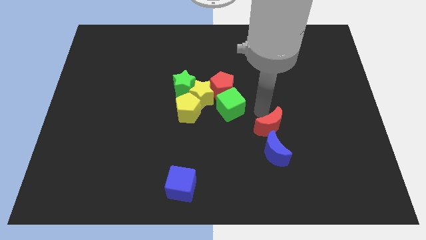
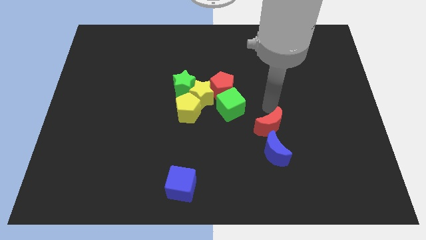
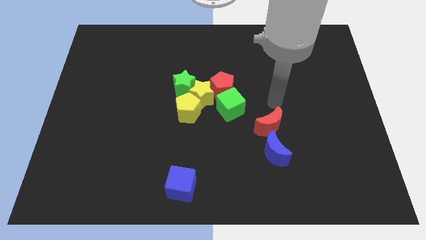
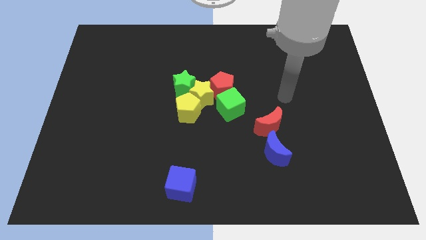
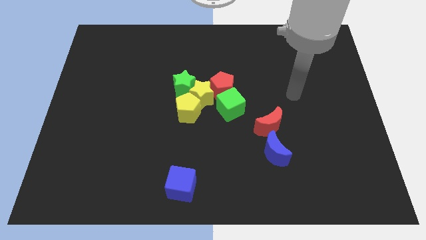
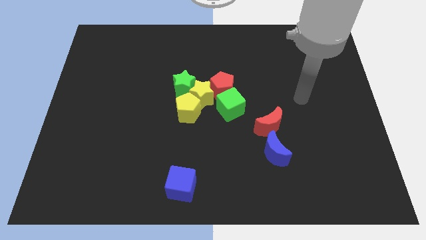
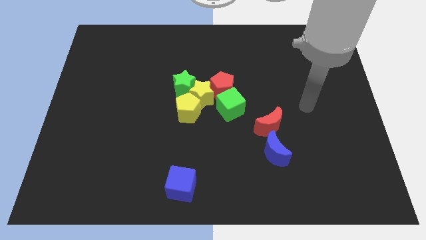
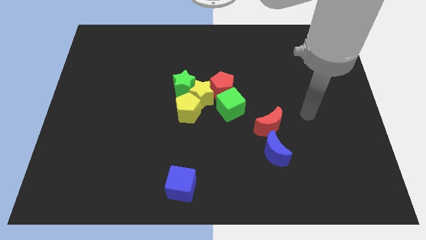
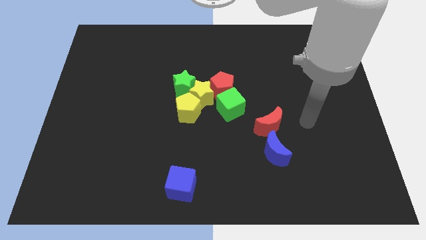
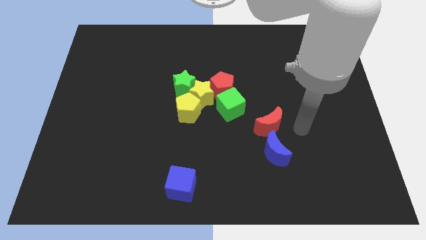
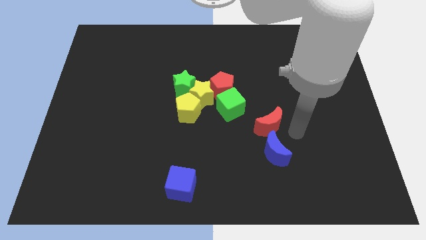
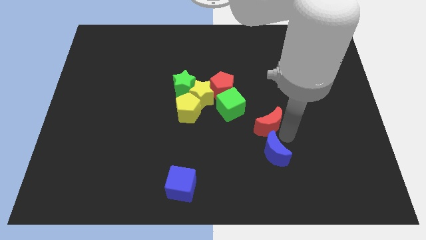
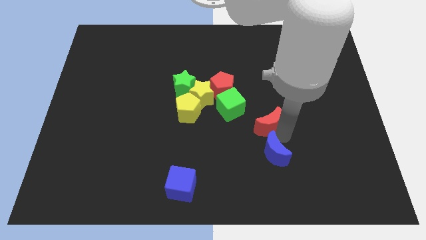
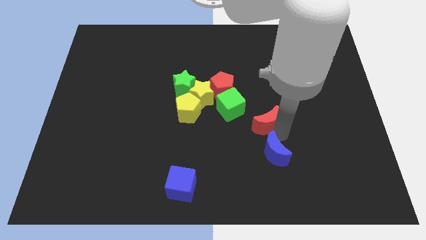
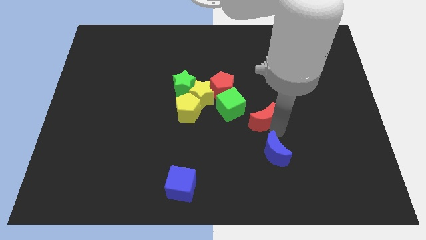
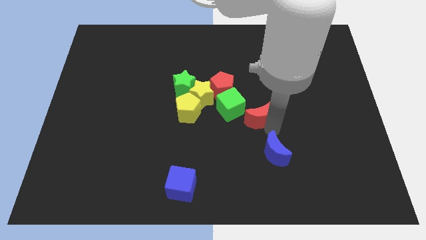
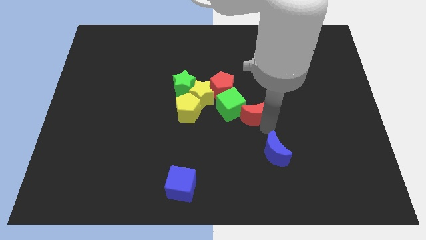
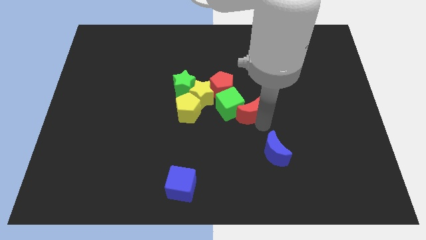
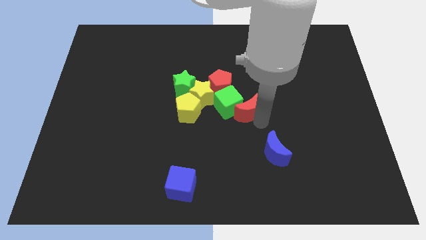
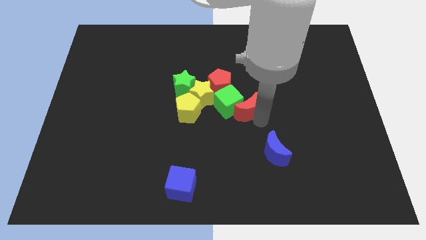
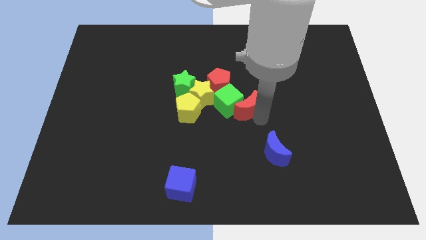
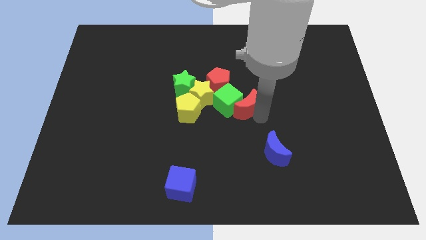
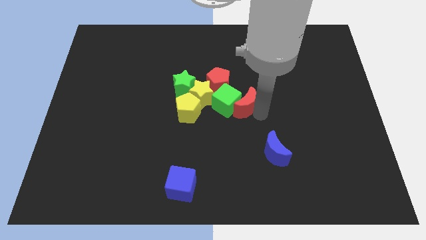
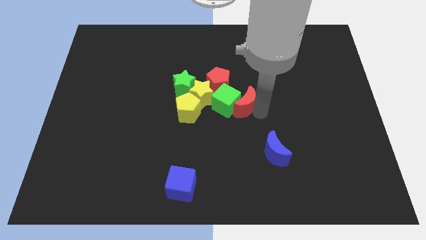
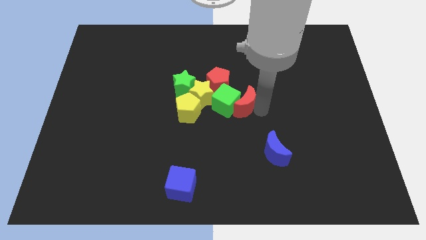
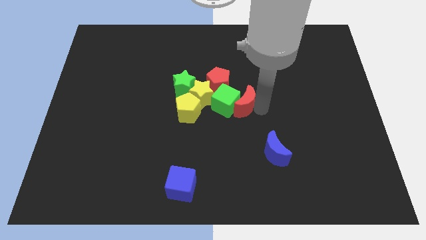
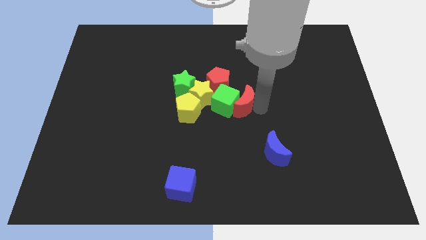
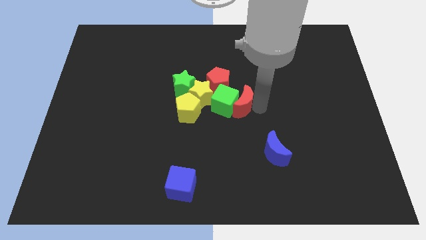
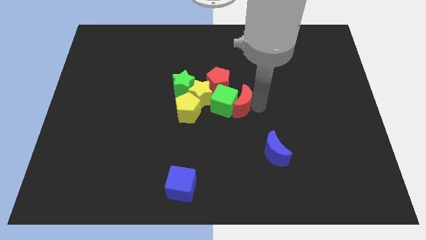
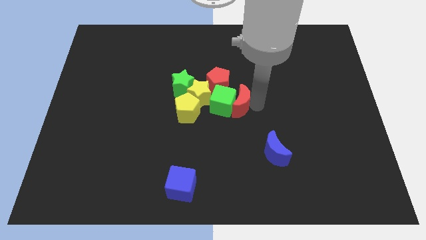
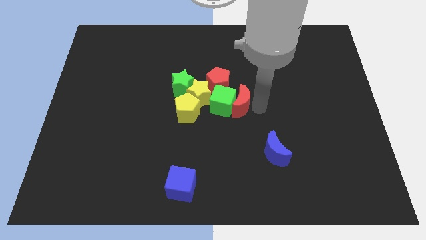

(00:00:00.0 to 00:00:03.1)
push the green cube with red moon

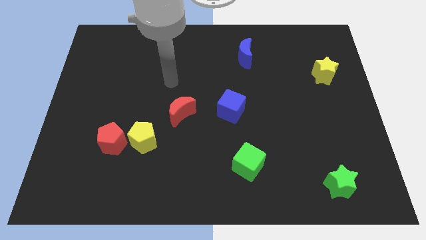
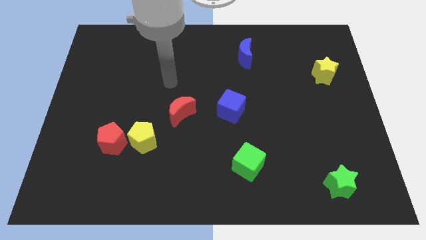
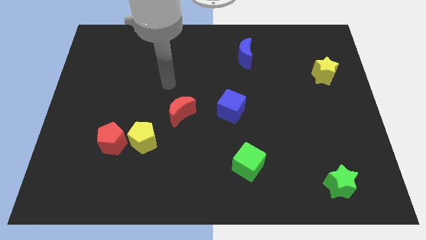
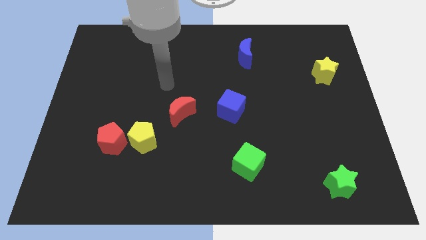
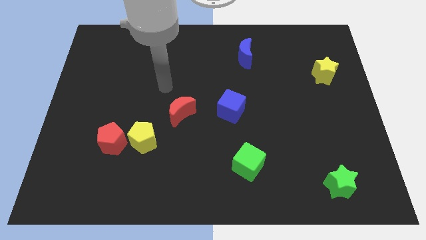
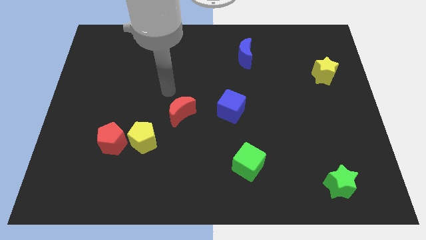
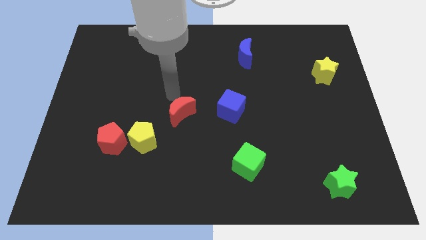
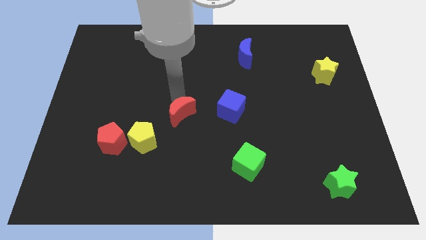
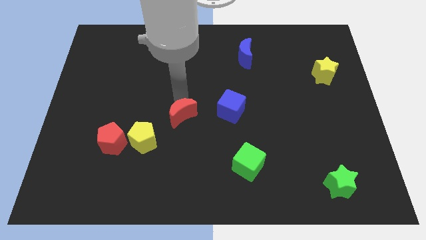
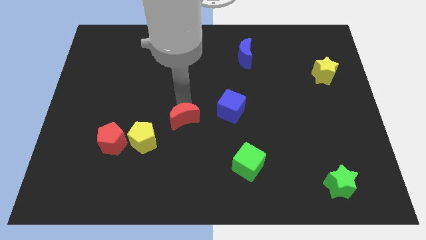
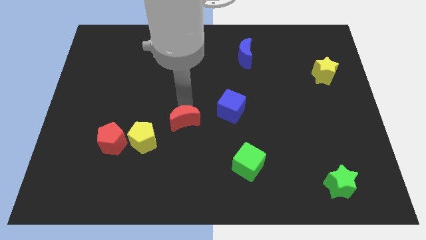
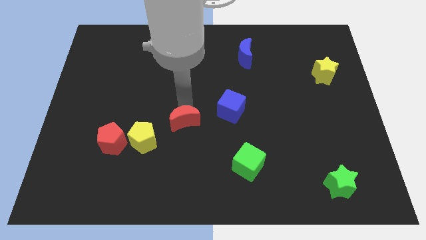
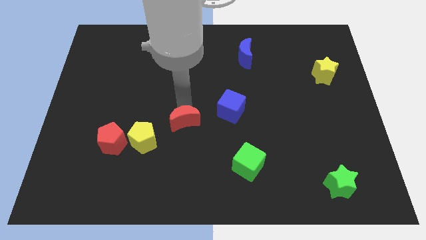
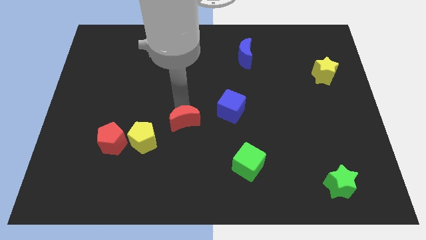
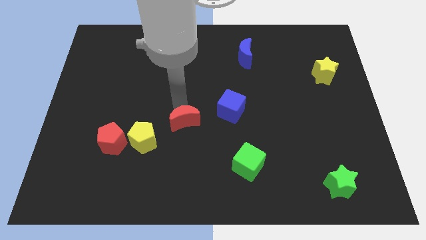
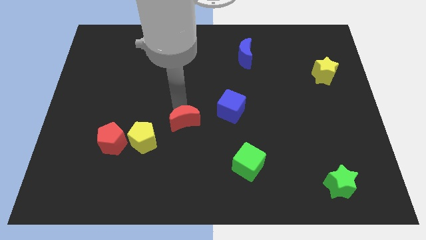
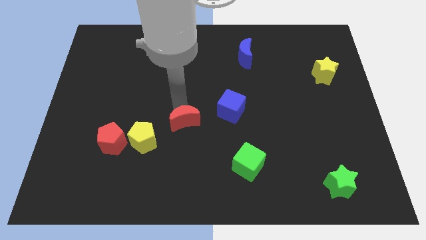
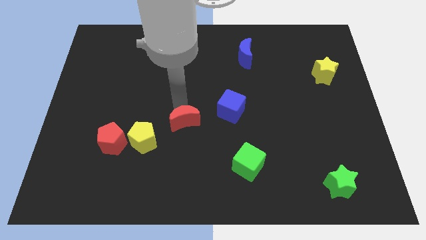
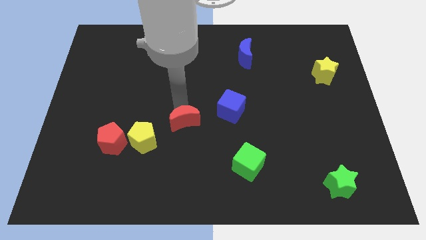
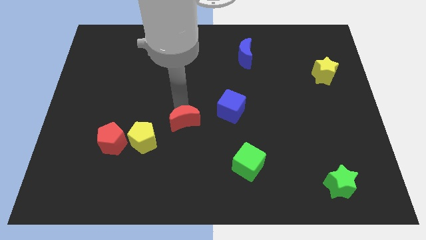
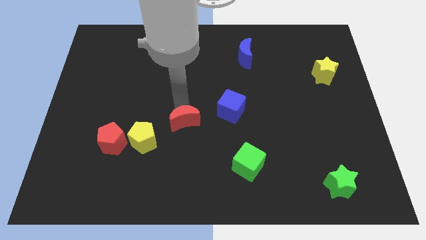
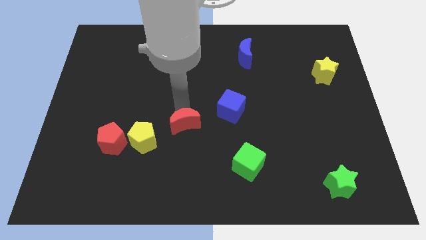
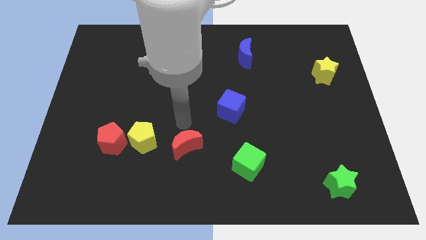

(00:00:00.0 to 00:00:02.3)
push the red moon towards bottom side of the board

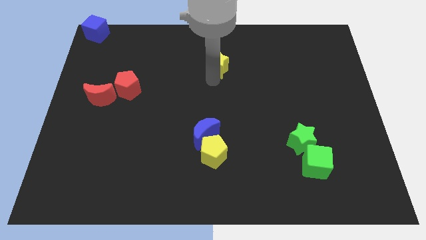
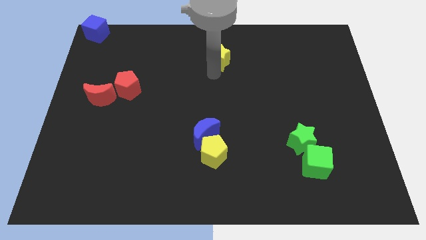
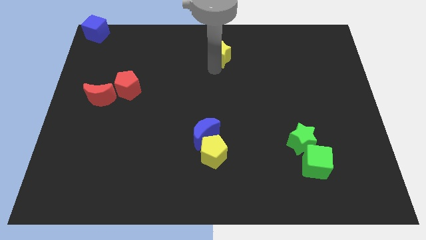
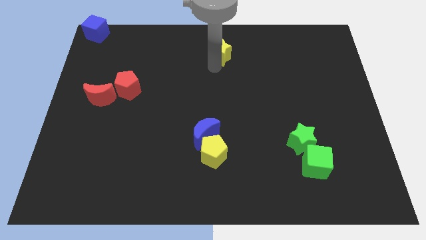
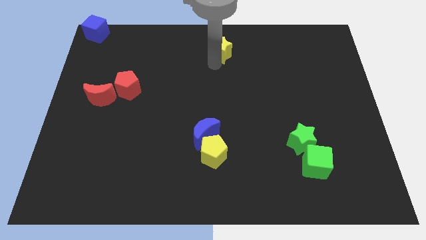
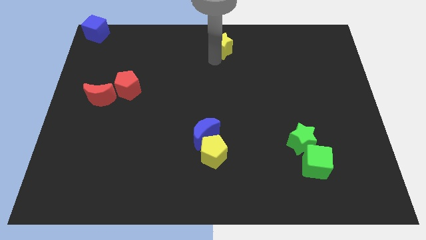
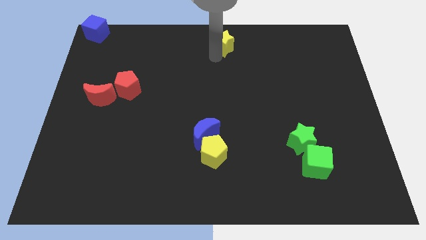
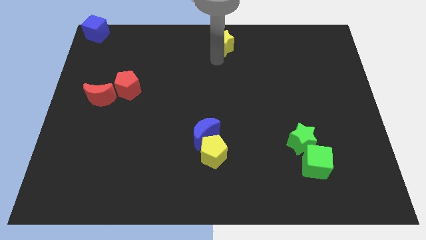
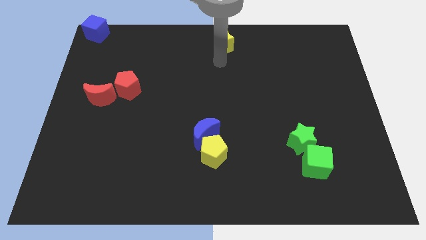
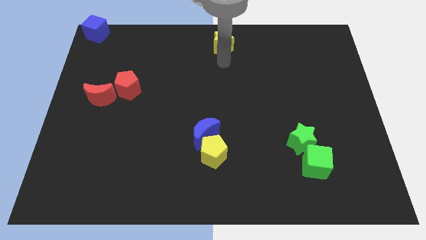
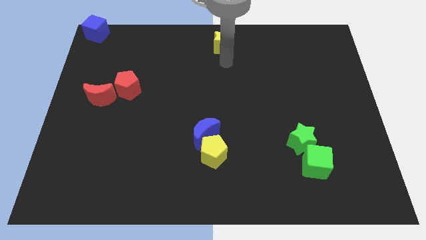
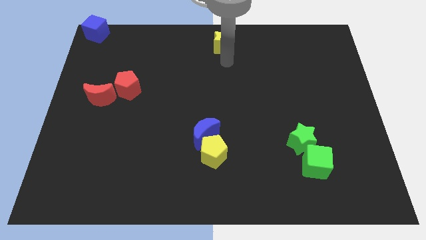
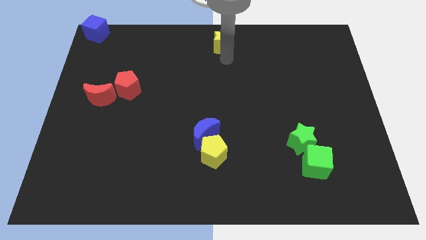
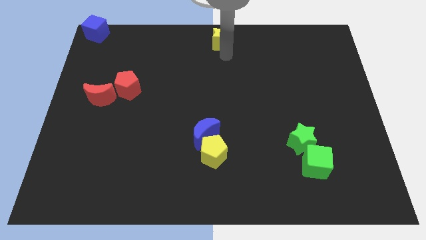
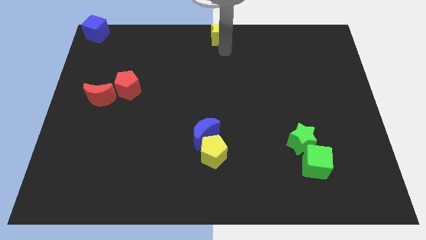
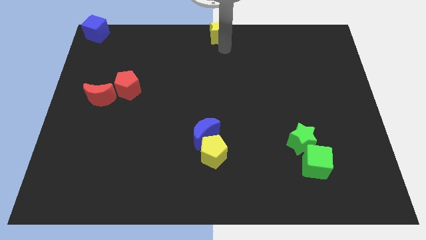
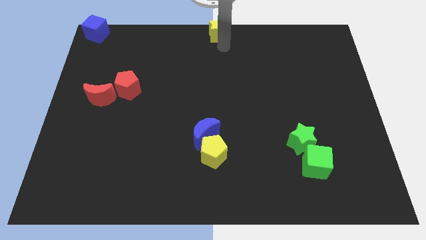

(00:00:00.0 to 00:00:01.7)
push the yellow star towards the top center of the board

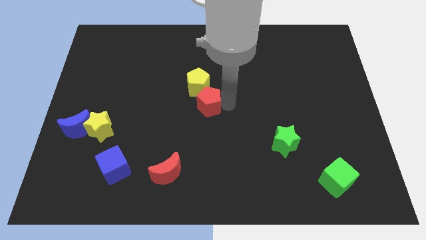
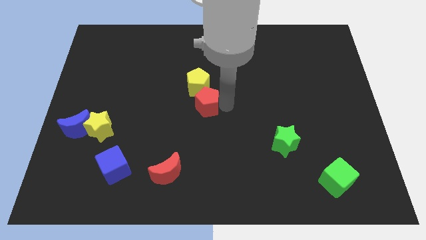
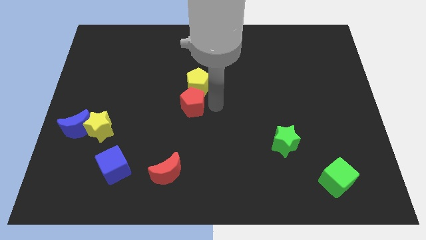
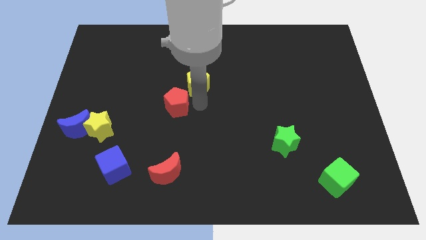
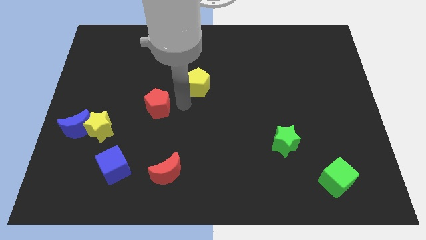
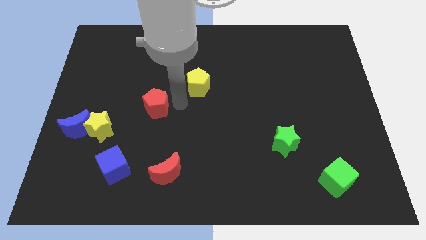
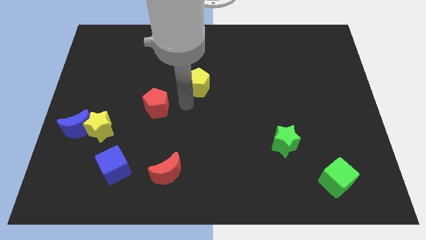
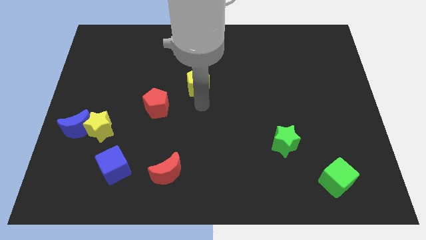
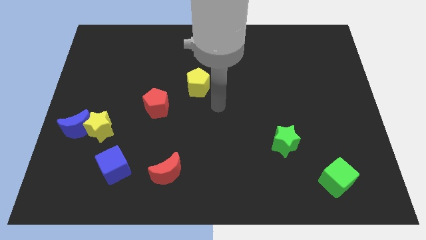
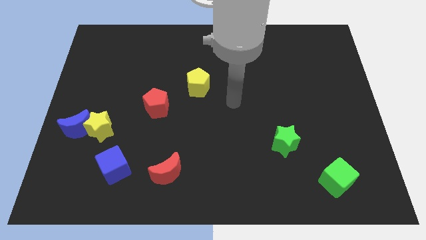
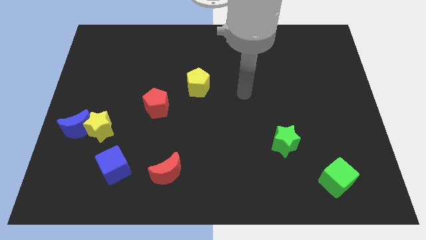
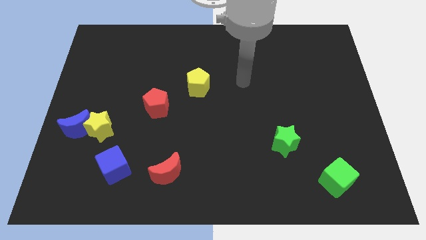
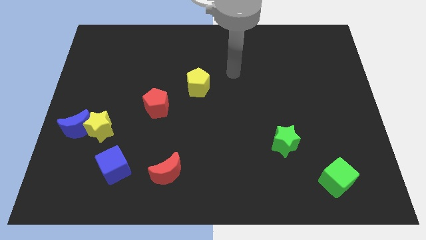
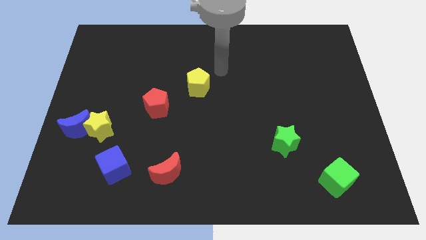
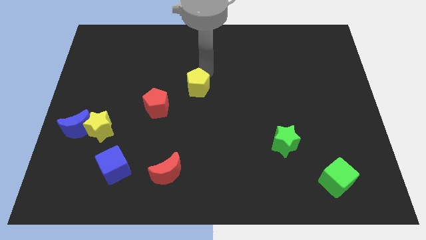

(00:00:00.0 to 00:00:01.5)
separate the red pentagon and yellow pentagon

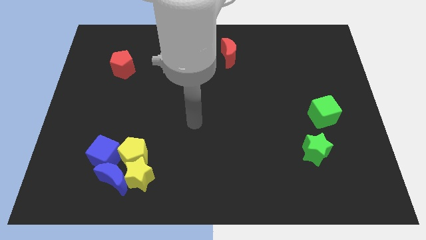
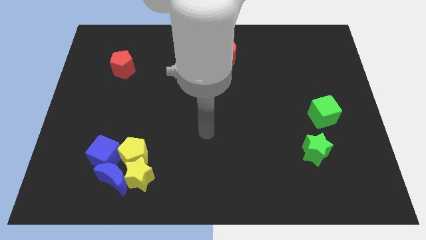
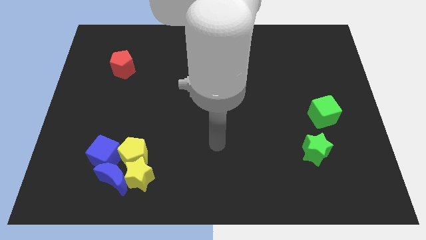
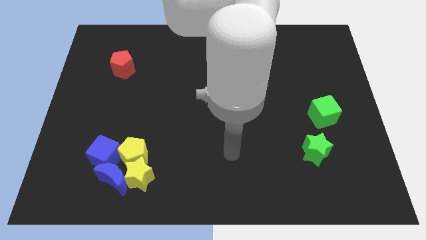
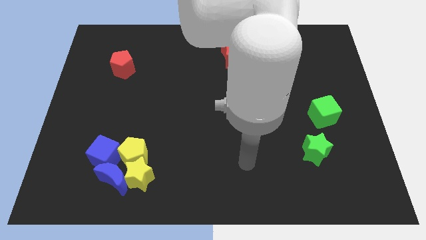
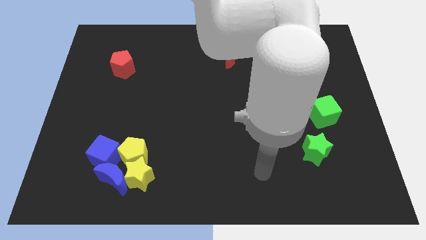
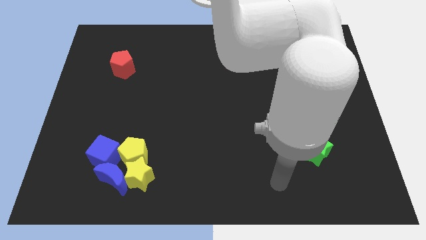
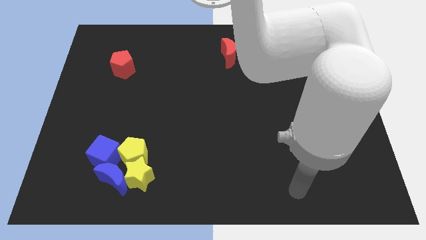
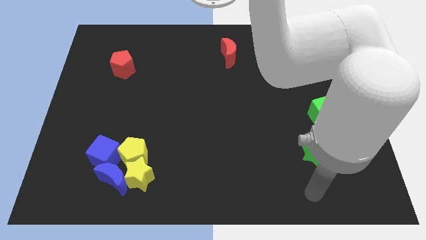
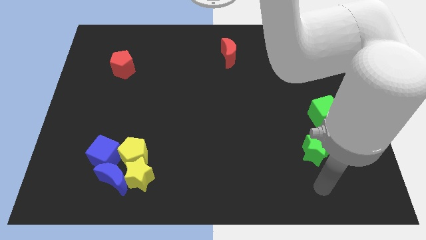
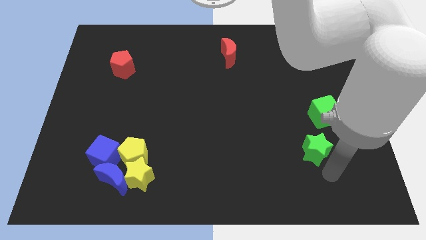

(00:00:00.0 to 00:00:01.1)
place your arm at the bottom of green star
